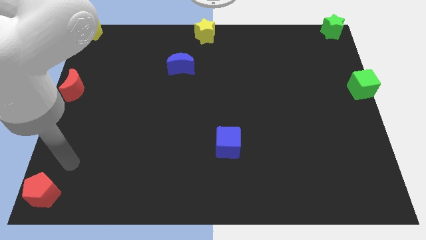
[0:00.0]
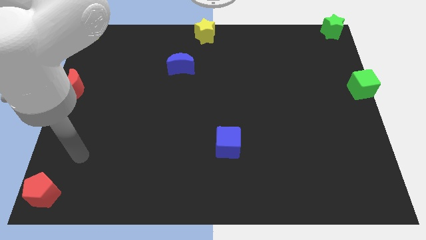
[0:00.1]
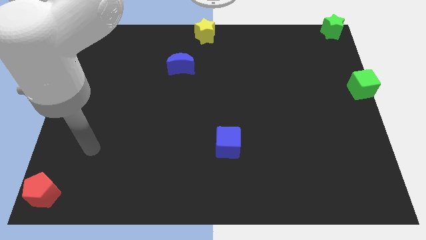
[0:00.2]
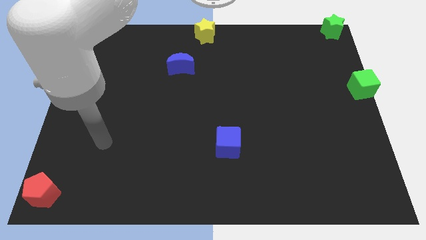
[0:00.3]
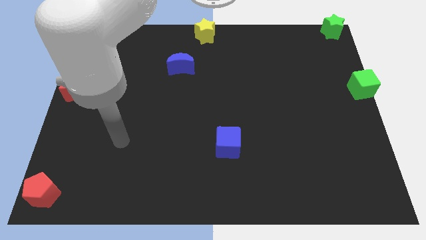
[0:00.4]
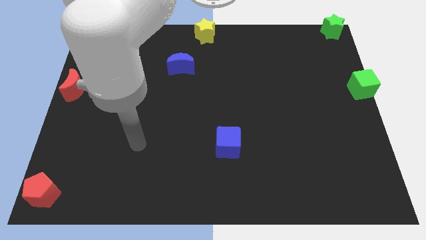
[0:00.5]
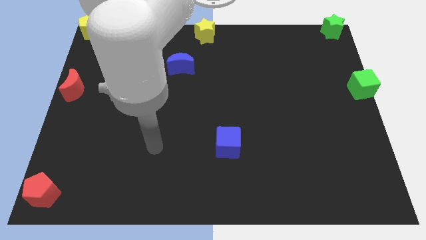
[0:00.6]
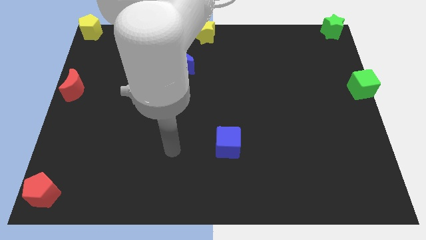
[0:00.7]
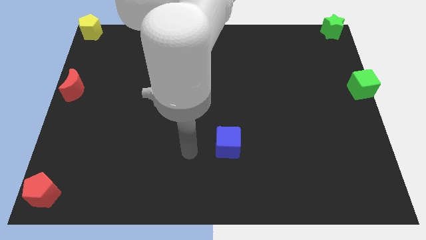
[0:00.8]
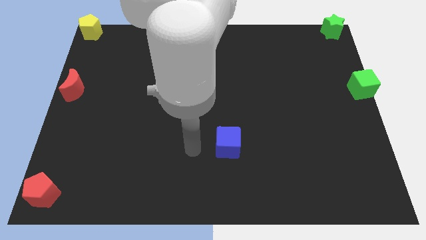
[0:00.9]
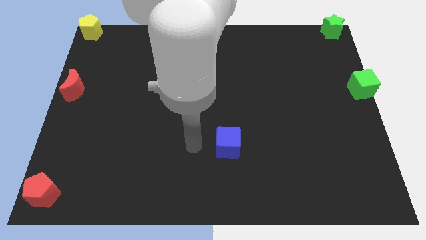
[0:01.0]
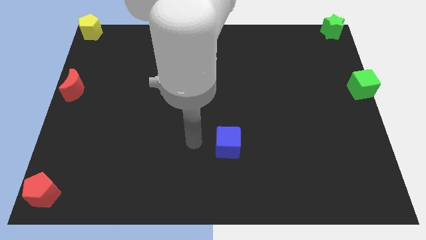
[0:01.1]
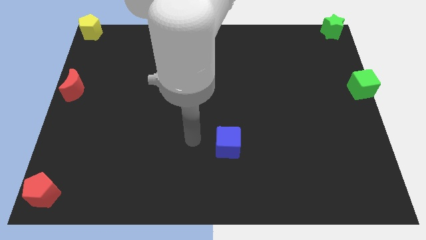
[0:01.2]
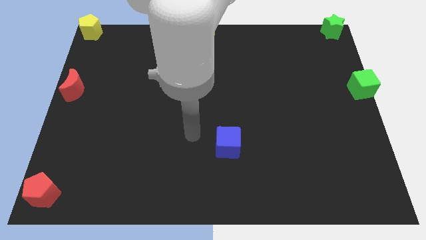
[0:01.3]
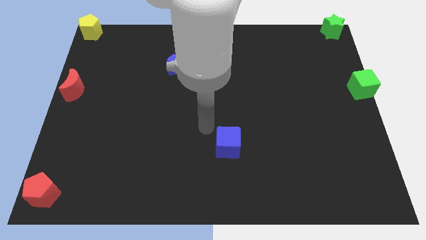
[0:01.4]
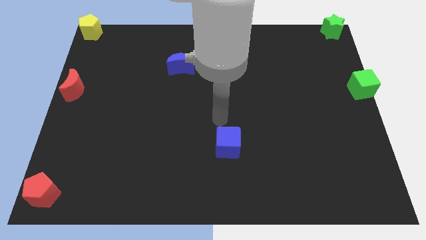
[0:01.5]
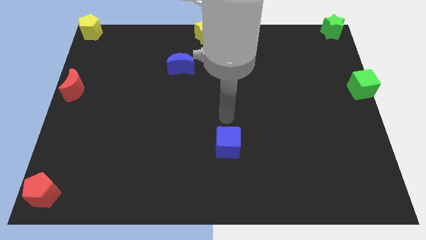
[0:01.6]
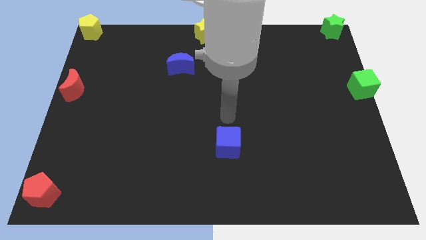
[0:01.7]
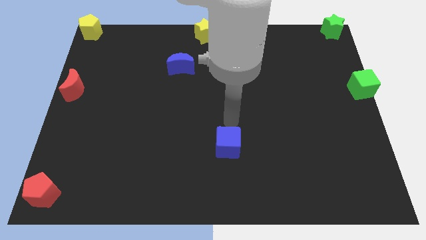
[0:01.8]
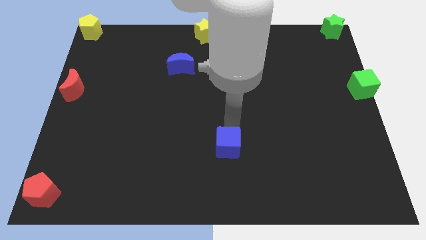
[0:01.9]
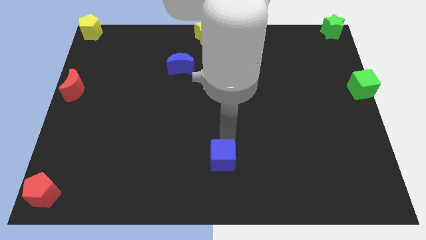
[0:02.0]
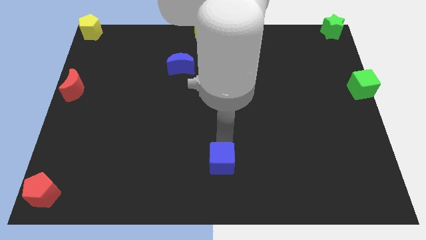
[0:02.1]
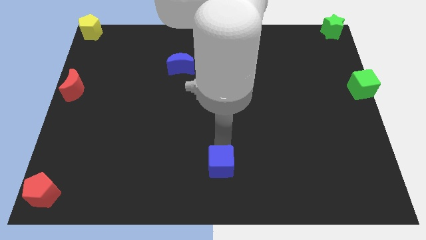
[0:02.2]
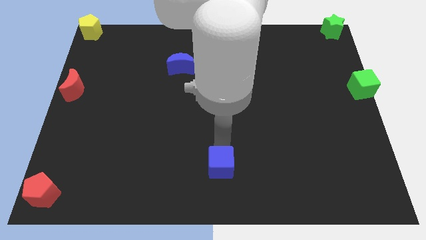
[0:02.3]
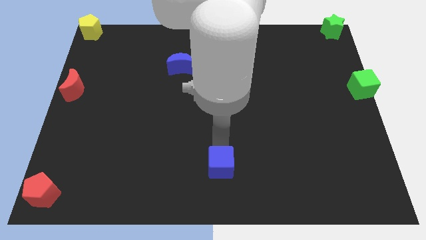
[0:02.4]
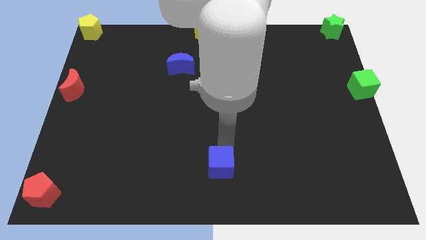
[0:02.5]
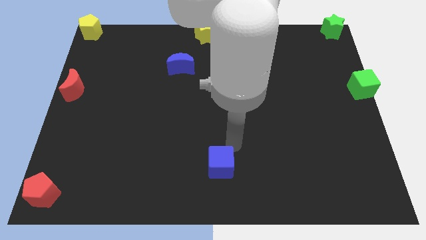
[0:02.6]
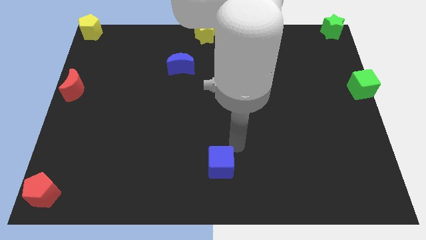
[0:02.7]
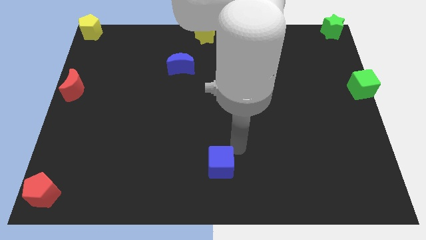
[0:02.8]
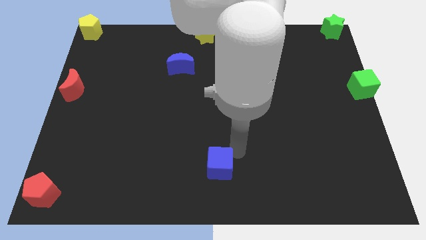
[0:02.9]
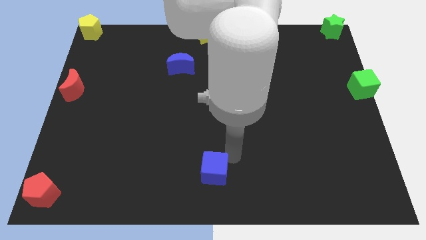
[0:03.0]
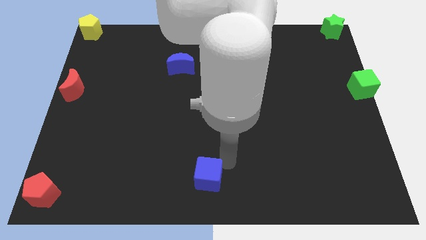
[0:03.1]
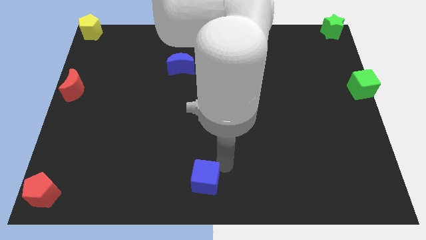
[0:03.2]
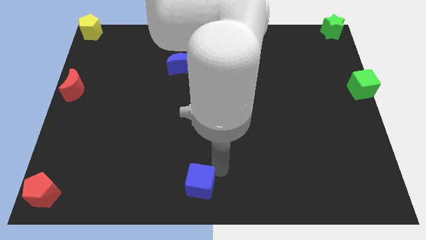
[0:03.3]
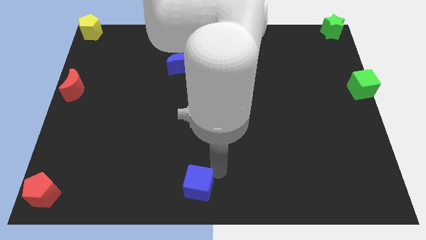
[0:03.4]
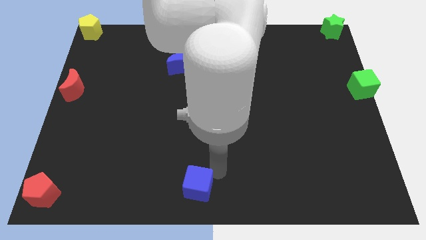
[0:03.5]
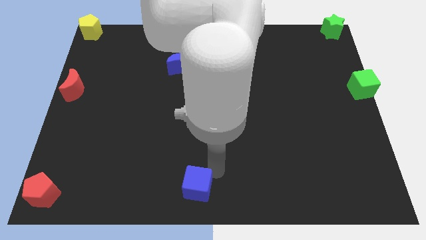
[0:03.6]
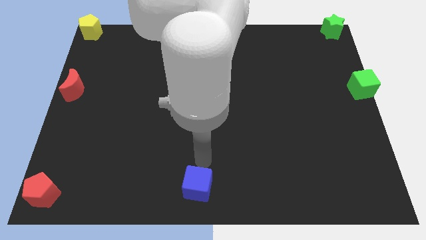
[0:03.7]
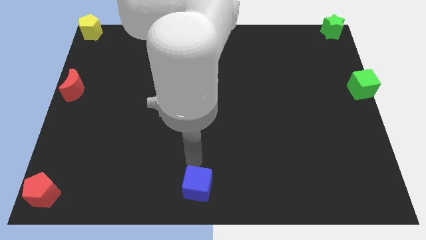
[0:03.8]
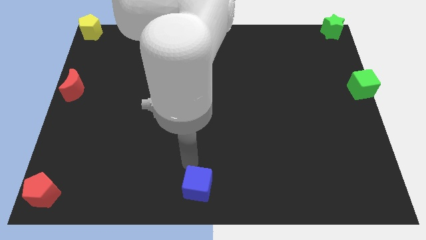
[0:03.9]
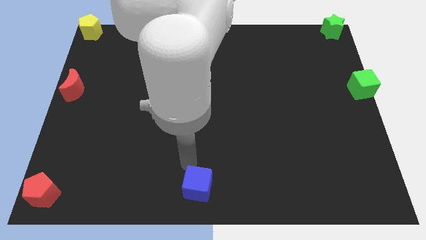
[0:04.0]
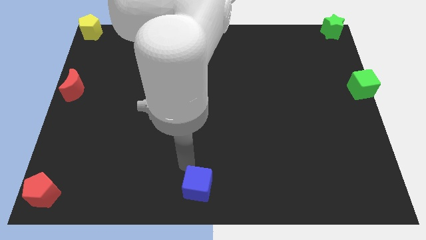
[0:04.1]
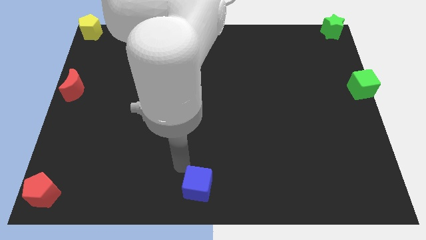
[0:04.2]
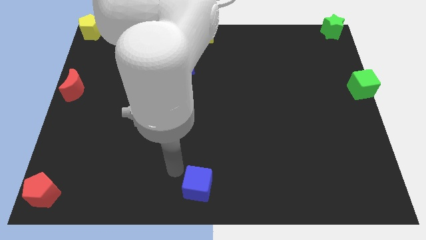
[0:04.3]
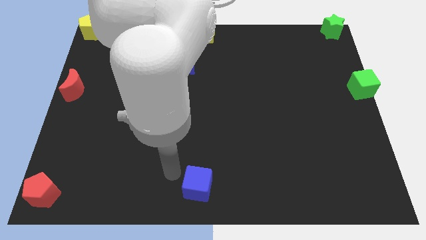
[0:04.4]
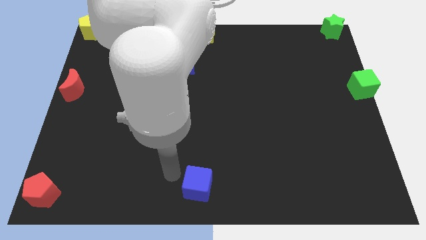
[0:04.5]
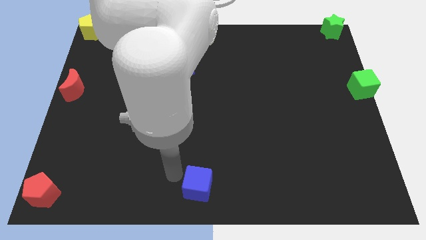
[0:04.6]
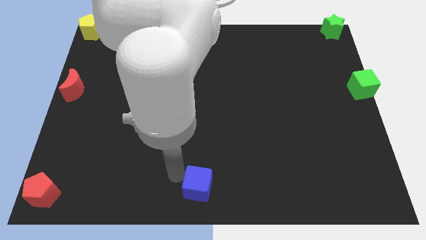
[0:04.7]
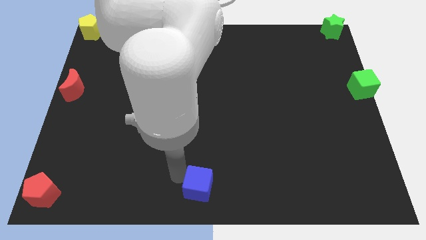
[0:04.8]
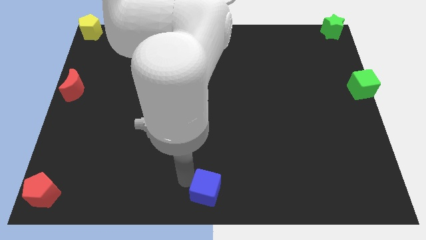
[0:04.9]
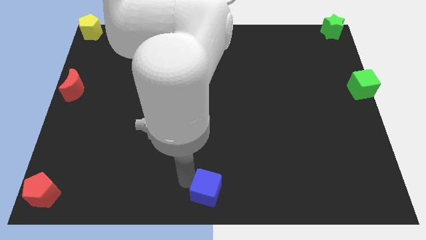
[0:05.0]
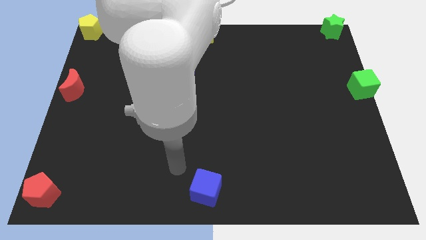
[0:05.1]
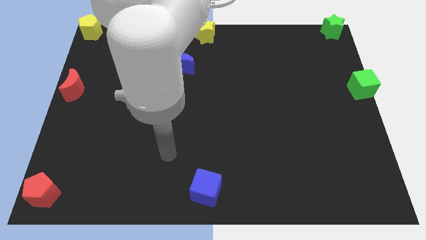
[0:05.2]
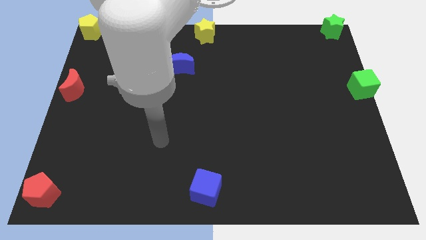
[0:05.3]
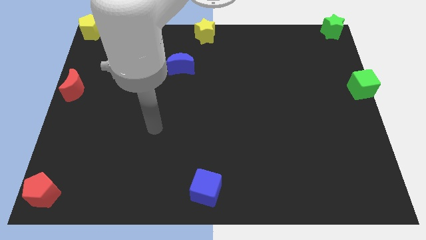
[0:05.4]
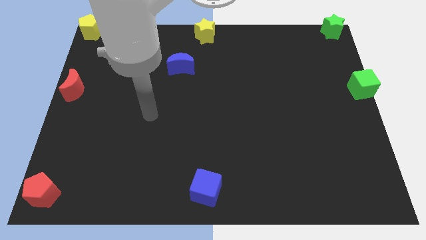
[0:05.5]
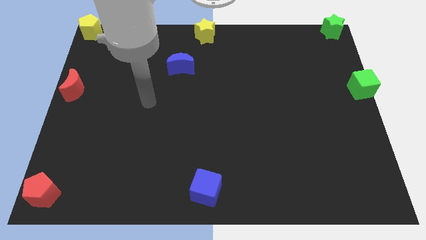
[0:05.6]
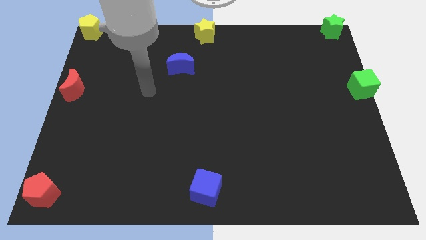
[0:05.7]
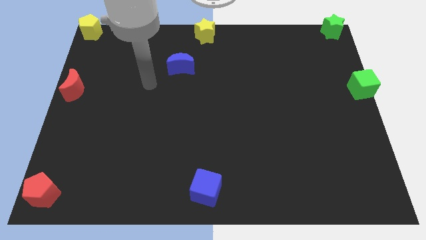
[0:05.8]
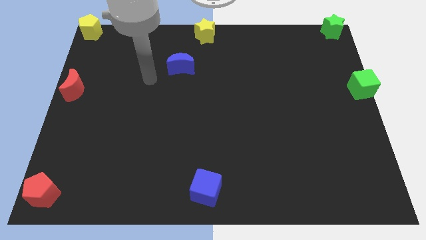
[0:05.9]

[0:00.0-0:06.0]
place the blue cube to the bottom center of the board

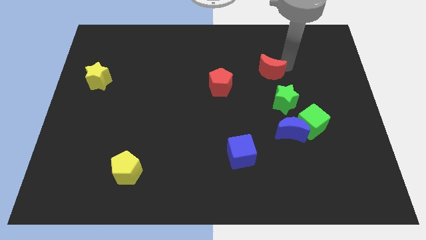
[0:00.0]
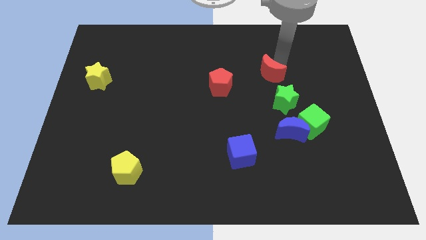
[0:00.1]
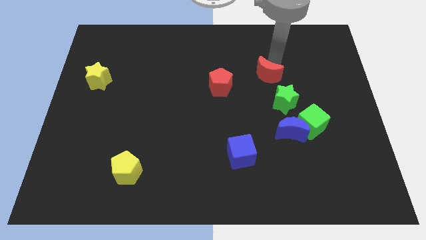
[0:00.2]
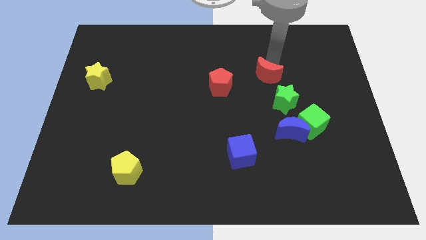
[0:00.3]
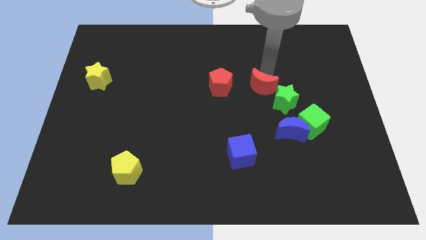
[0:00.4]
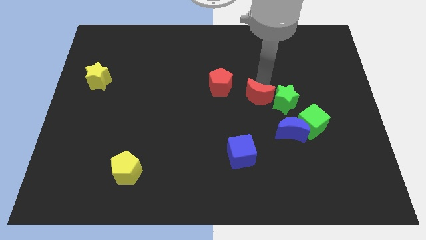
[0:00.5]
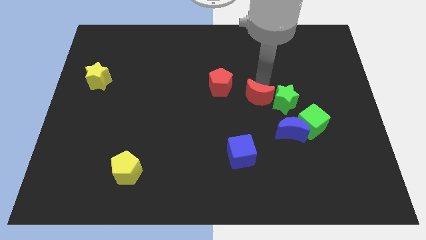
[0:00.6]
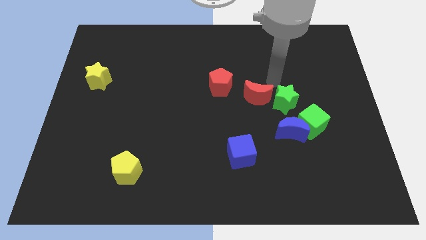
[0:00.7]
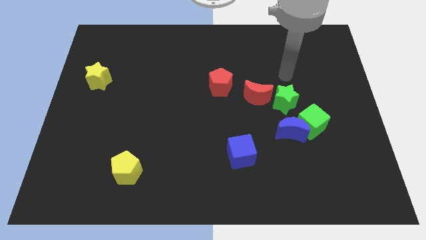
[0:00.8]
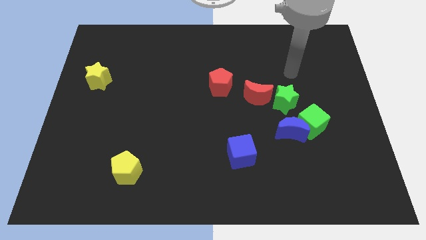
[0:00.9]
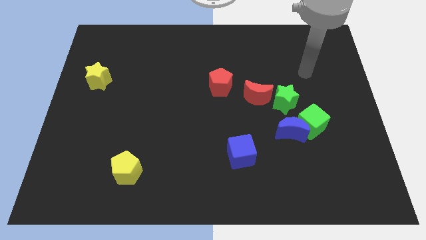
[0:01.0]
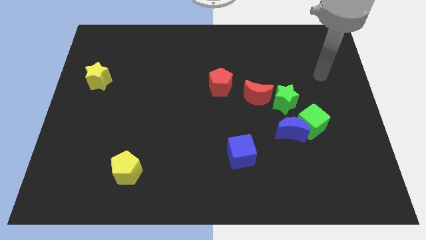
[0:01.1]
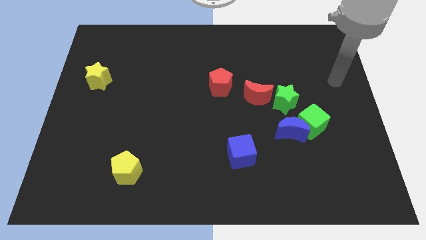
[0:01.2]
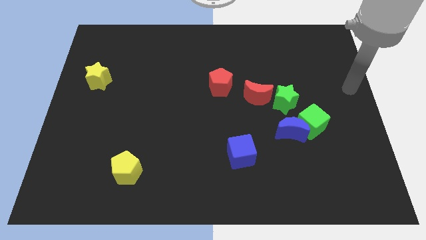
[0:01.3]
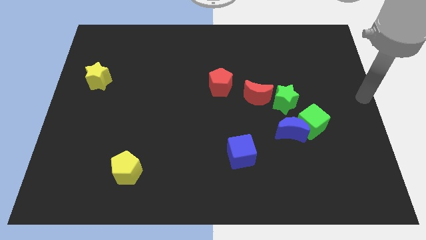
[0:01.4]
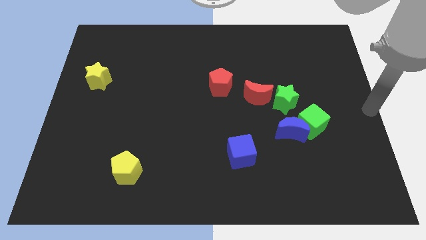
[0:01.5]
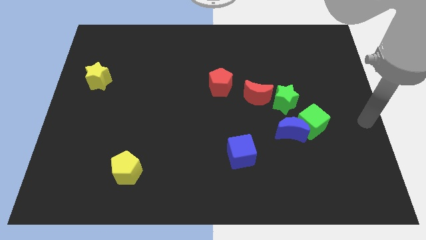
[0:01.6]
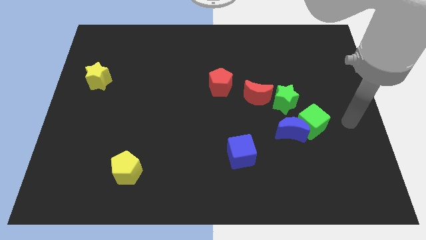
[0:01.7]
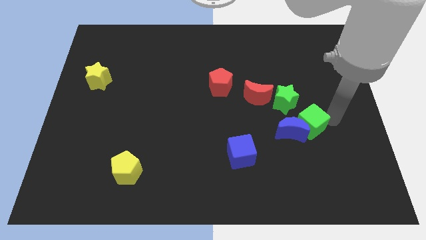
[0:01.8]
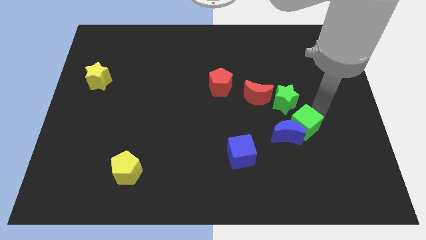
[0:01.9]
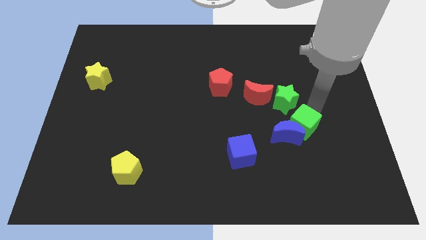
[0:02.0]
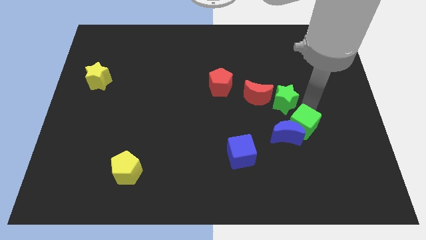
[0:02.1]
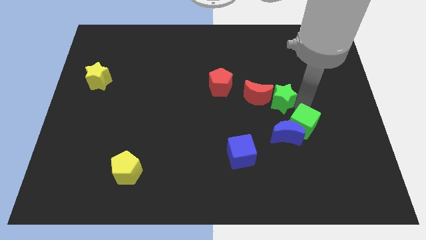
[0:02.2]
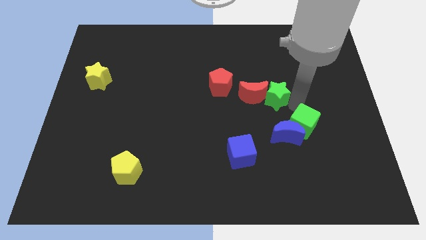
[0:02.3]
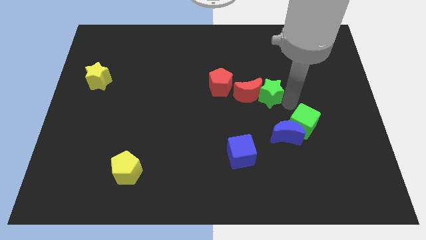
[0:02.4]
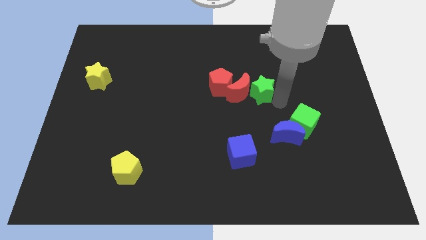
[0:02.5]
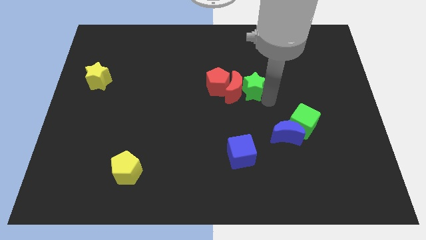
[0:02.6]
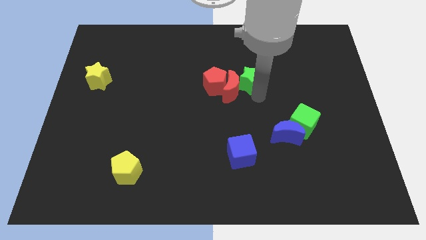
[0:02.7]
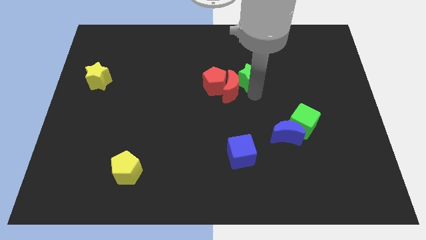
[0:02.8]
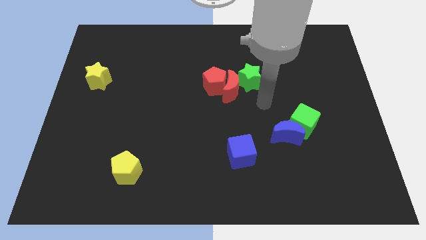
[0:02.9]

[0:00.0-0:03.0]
push green star in to red moon
